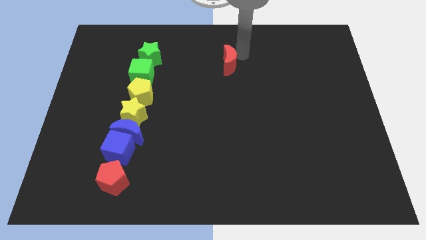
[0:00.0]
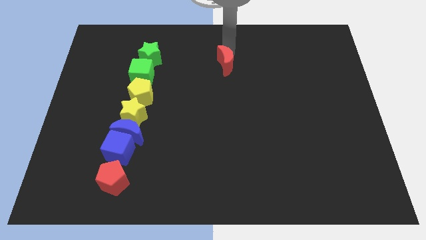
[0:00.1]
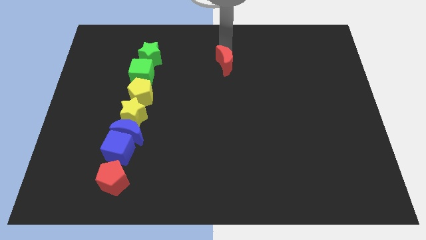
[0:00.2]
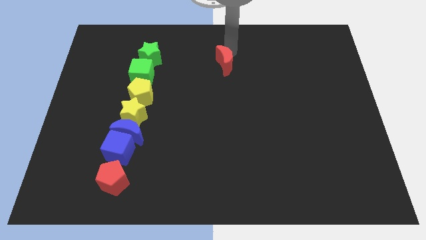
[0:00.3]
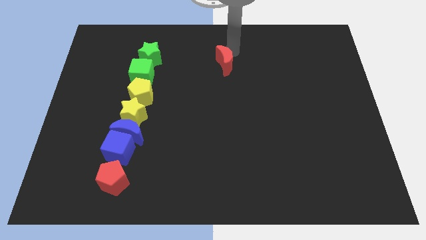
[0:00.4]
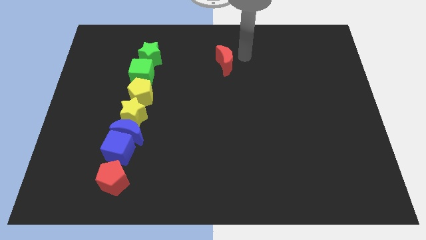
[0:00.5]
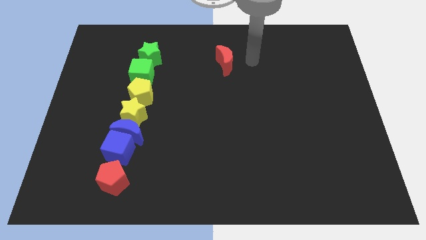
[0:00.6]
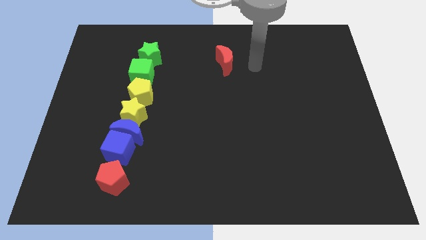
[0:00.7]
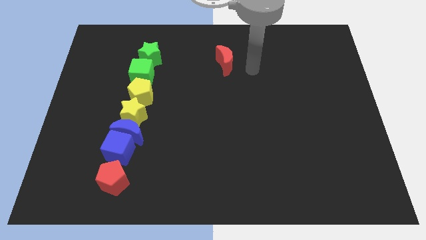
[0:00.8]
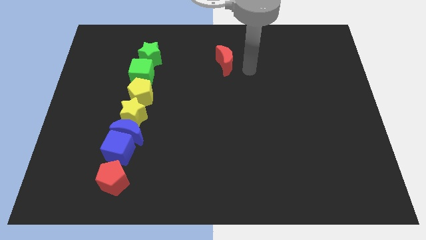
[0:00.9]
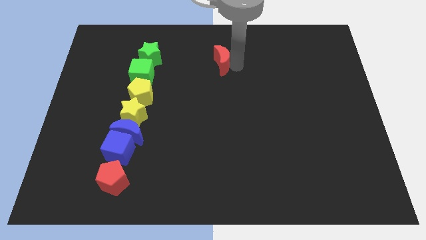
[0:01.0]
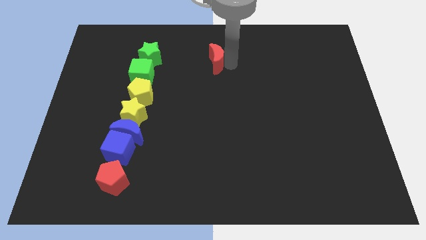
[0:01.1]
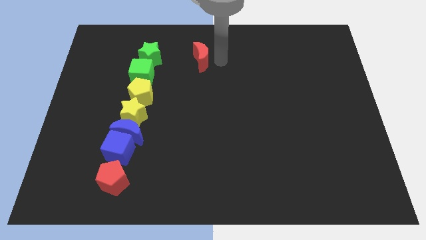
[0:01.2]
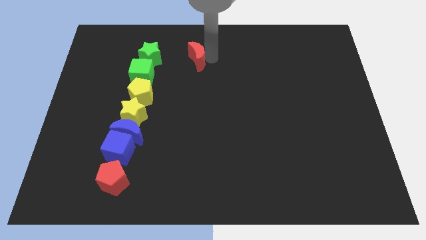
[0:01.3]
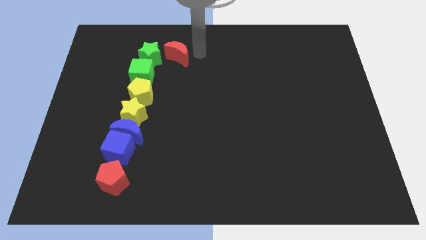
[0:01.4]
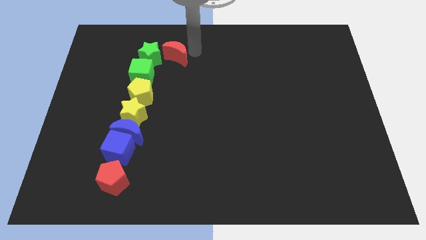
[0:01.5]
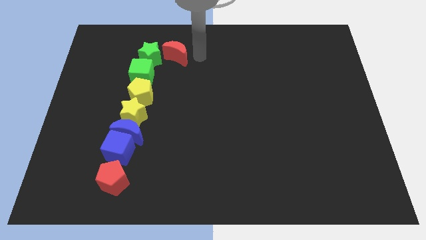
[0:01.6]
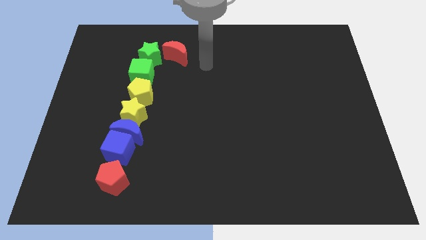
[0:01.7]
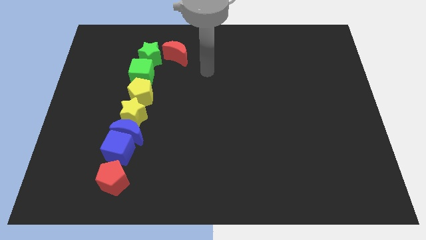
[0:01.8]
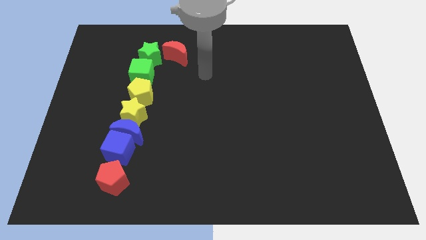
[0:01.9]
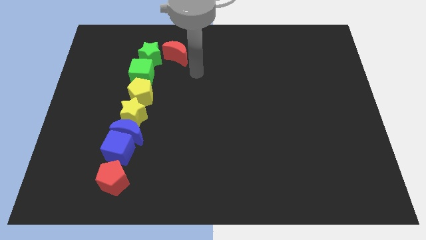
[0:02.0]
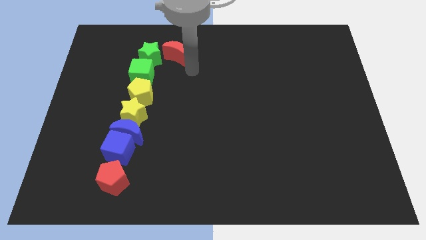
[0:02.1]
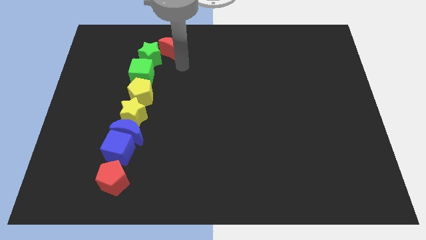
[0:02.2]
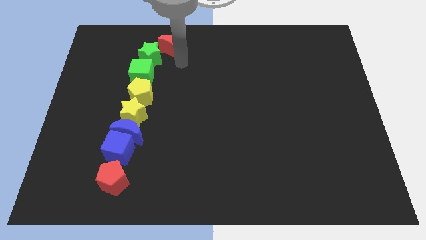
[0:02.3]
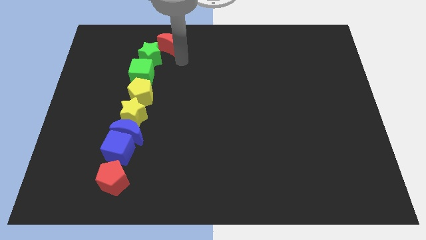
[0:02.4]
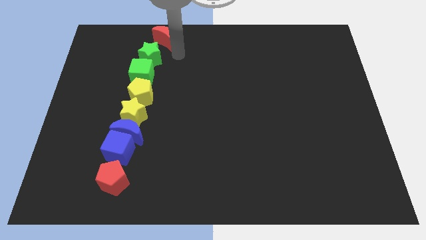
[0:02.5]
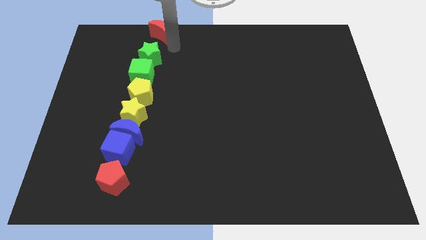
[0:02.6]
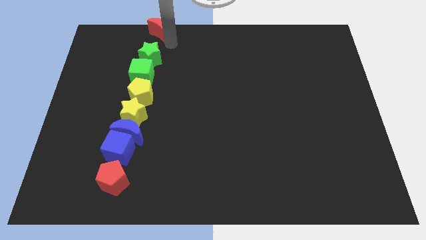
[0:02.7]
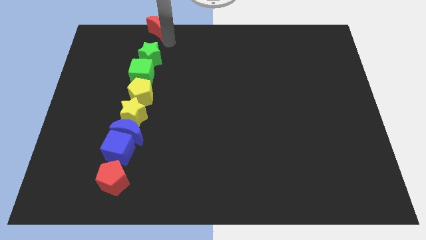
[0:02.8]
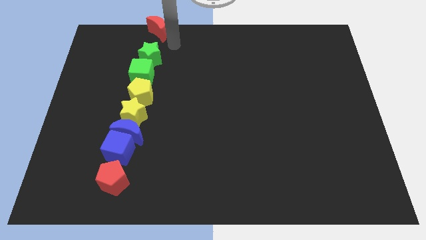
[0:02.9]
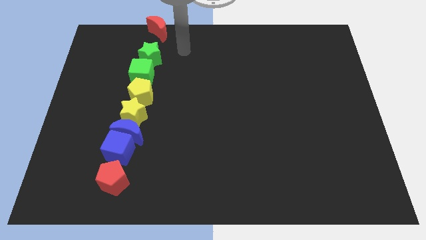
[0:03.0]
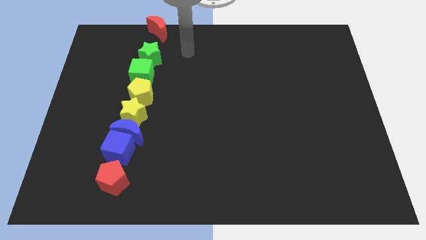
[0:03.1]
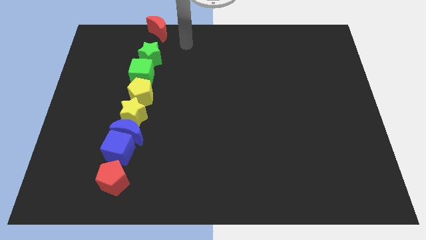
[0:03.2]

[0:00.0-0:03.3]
place the red moon above the green star

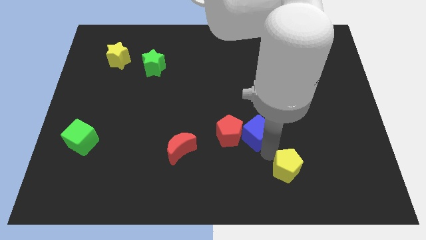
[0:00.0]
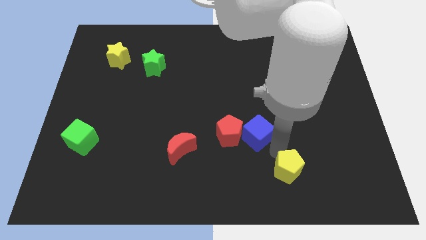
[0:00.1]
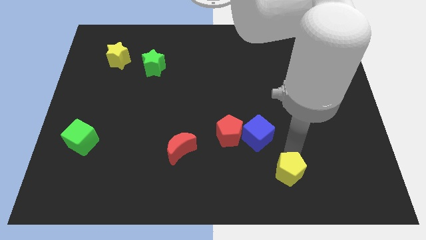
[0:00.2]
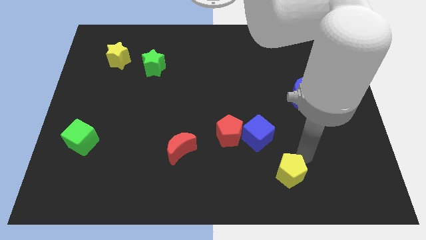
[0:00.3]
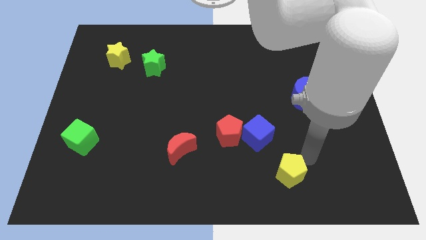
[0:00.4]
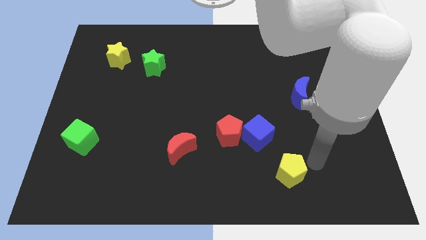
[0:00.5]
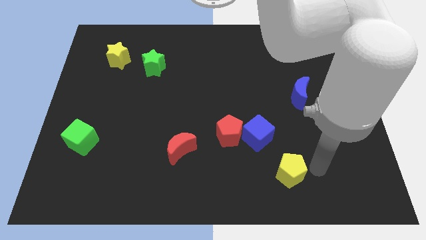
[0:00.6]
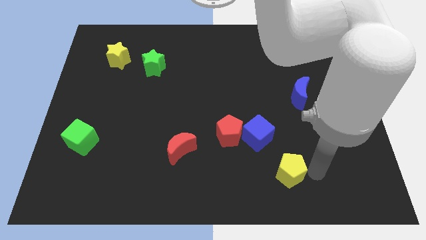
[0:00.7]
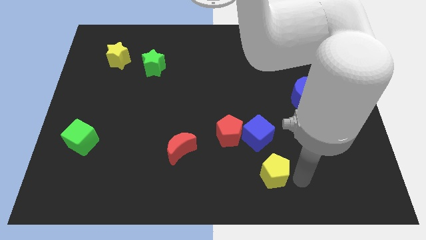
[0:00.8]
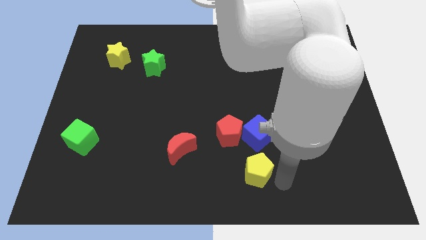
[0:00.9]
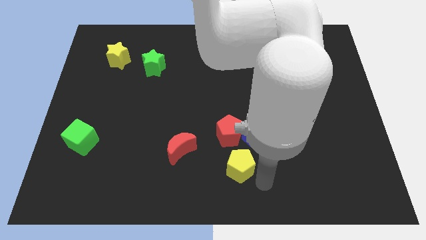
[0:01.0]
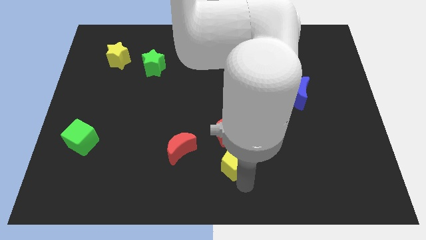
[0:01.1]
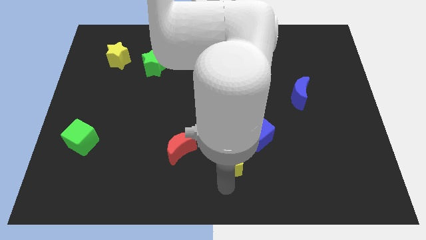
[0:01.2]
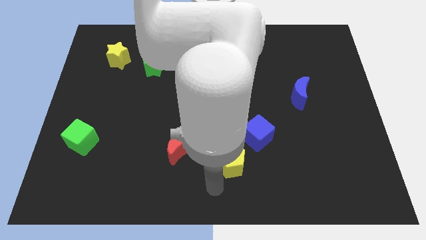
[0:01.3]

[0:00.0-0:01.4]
place the yellow pentagon below the red pentagon

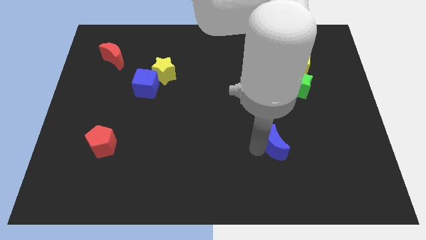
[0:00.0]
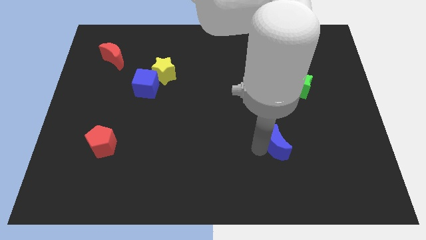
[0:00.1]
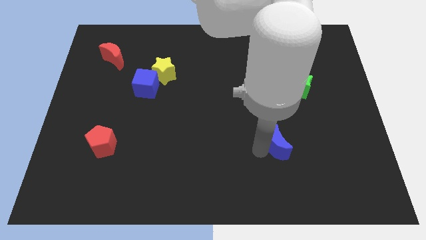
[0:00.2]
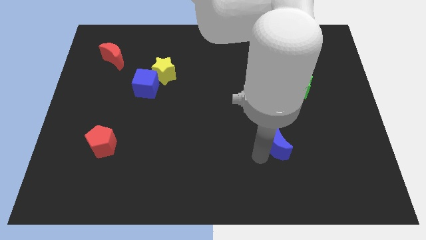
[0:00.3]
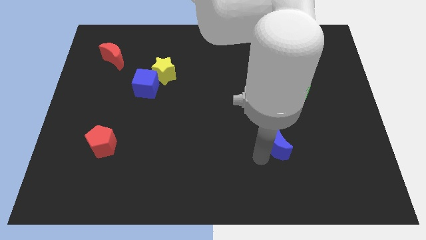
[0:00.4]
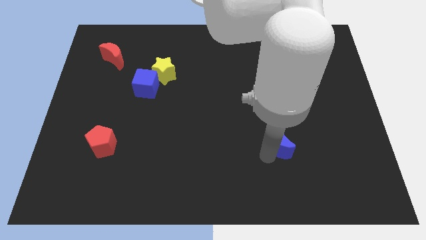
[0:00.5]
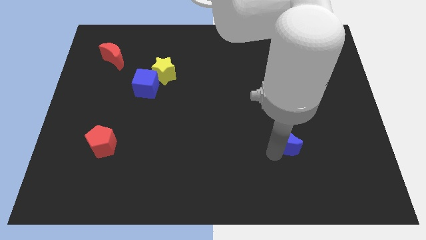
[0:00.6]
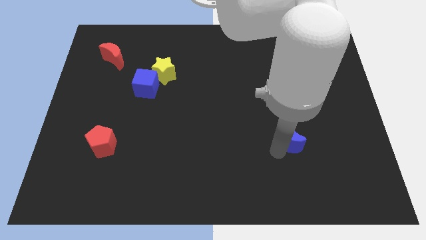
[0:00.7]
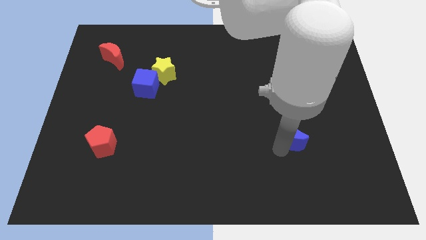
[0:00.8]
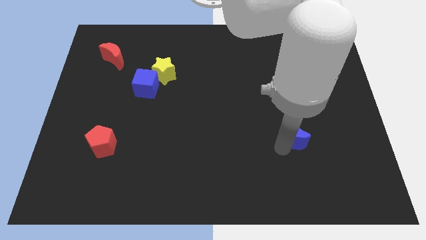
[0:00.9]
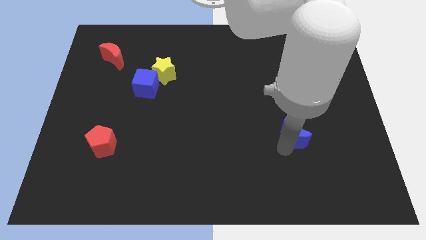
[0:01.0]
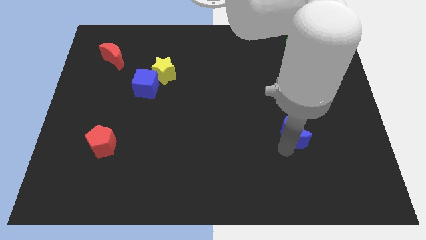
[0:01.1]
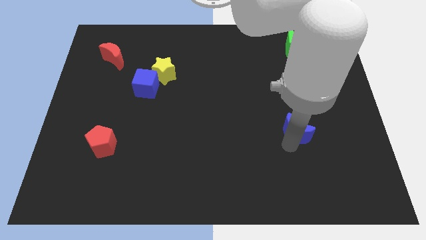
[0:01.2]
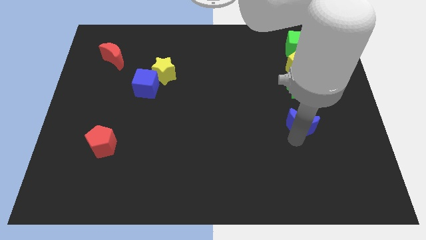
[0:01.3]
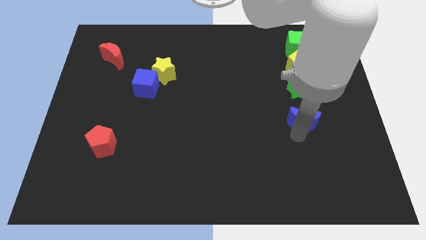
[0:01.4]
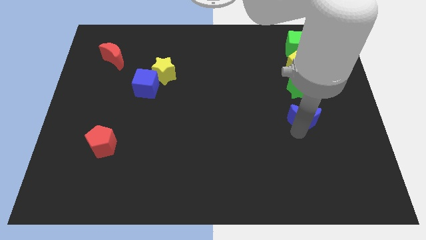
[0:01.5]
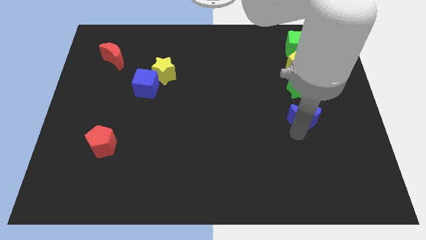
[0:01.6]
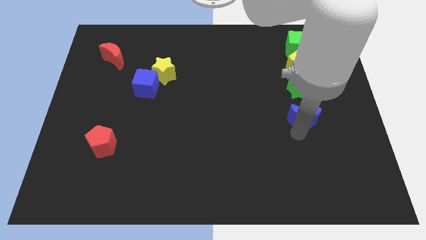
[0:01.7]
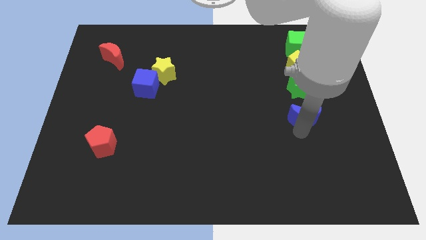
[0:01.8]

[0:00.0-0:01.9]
place the blue moon underneath the green star

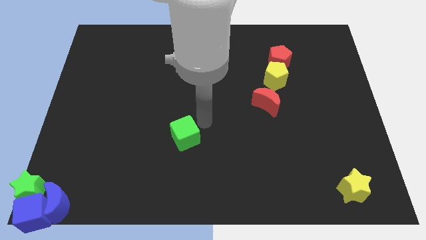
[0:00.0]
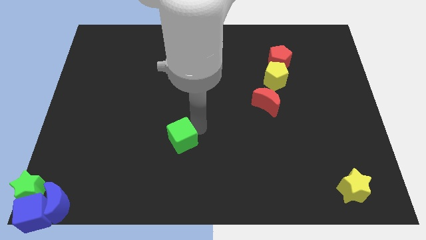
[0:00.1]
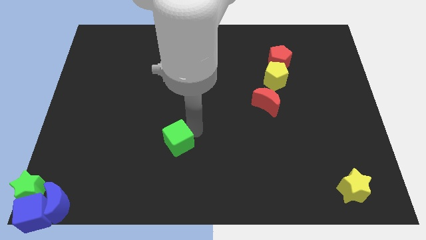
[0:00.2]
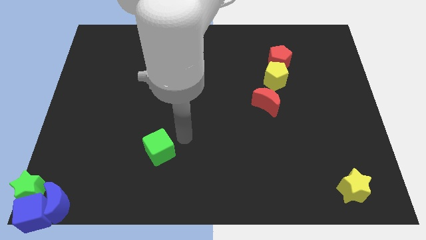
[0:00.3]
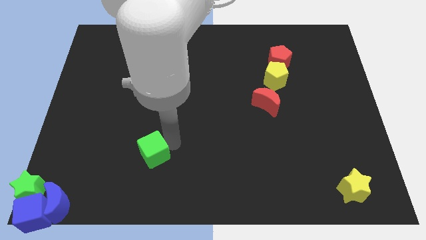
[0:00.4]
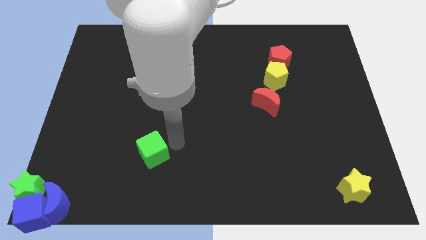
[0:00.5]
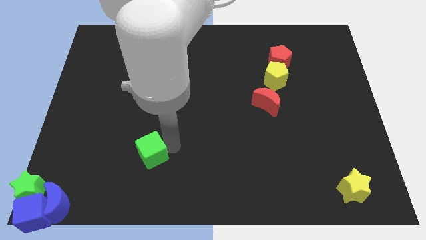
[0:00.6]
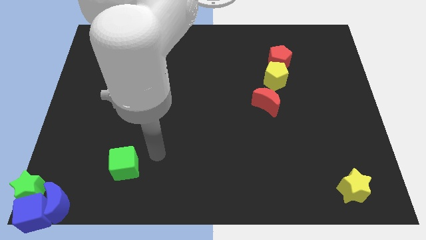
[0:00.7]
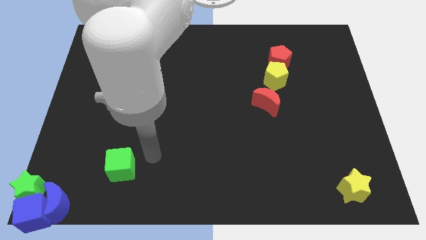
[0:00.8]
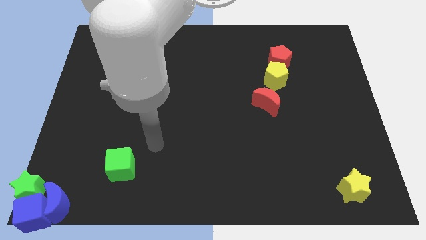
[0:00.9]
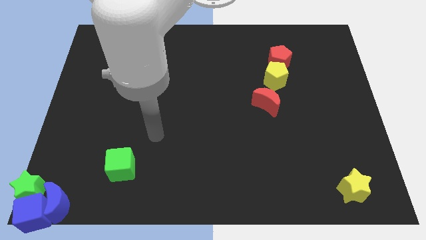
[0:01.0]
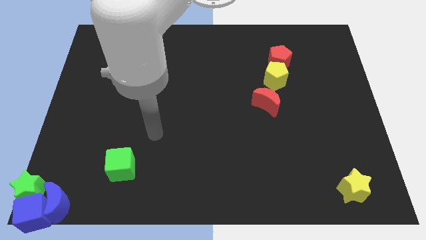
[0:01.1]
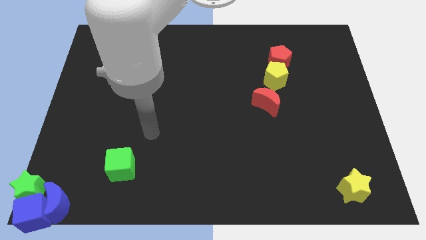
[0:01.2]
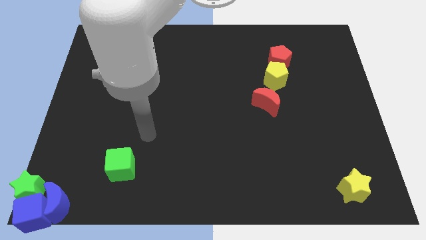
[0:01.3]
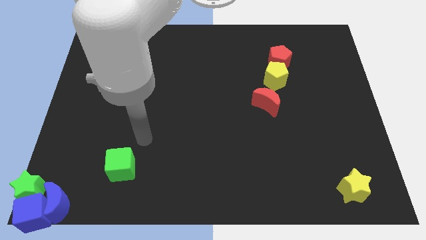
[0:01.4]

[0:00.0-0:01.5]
place the green cube at the top right of the blue moon

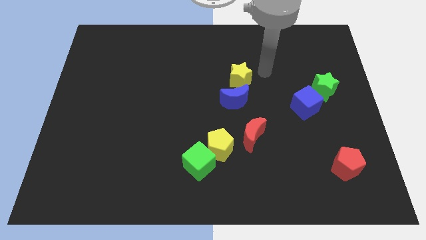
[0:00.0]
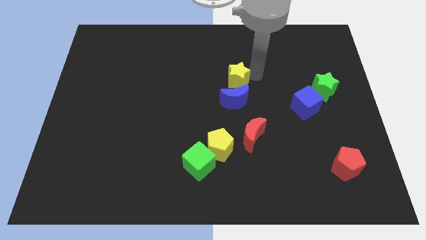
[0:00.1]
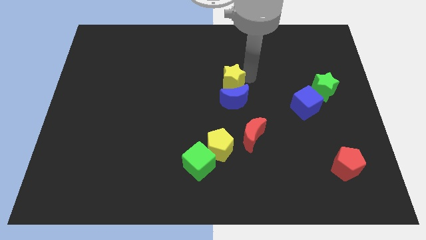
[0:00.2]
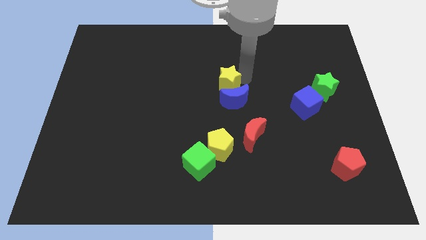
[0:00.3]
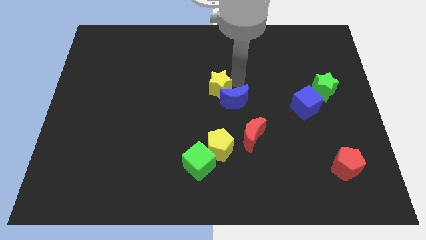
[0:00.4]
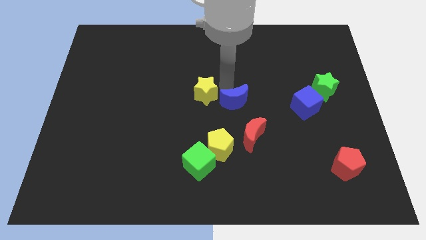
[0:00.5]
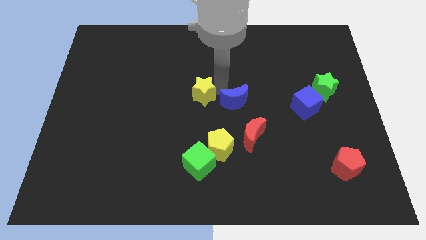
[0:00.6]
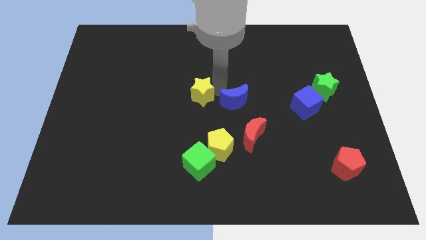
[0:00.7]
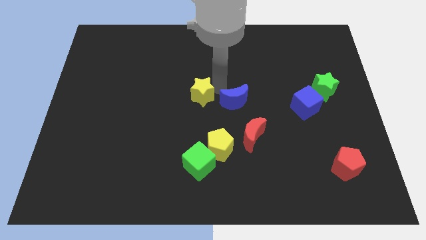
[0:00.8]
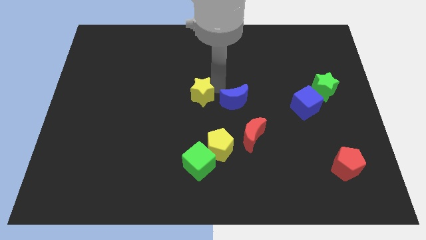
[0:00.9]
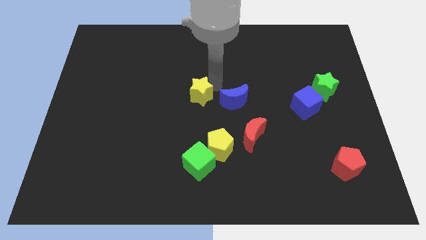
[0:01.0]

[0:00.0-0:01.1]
drag the yellow star left to the blue moon
